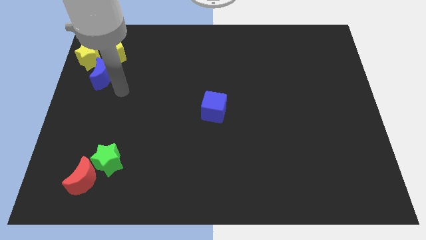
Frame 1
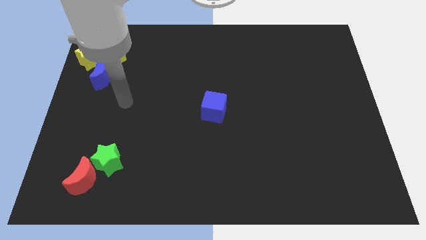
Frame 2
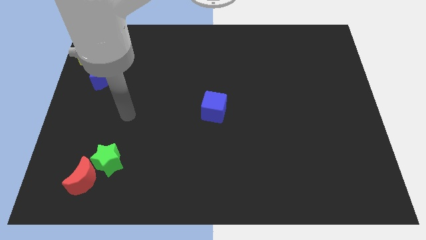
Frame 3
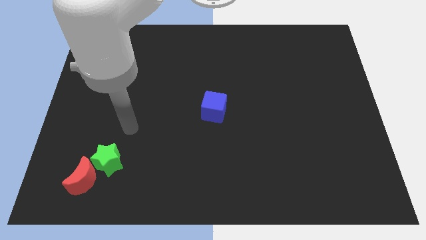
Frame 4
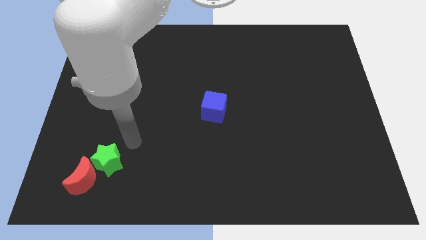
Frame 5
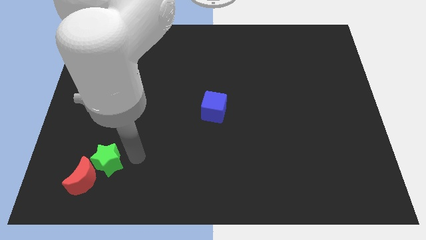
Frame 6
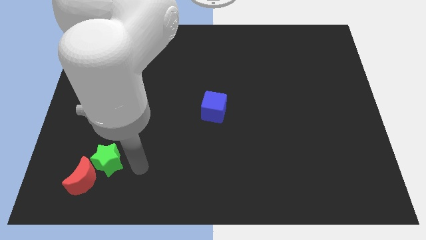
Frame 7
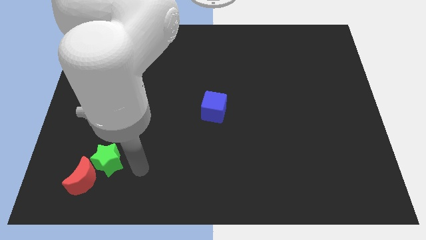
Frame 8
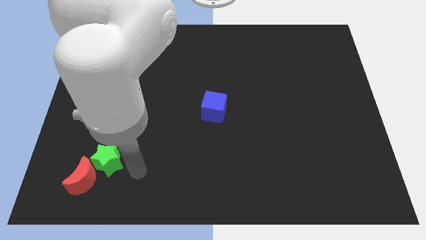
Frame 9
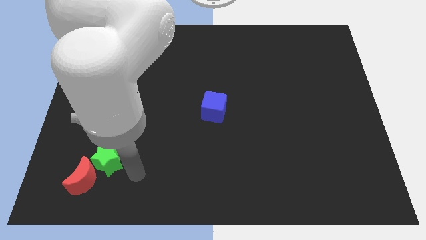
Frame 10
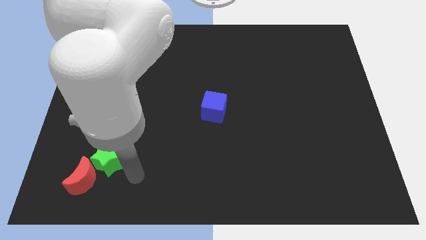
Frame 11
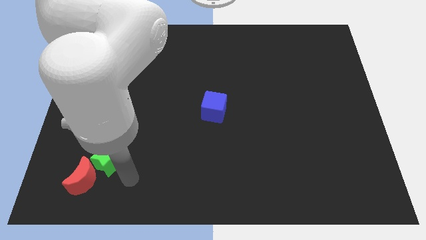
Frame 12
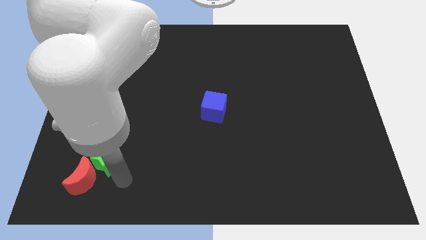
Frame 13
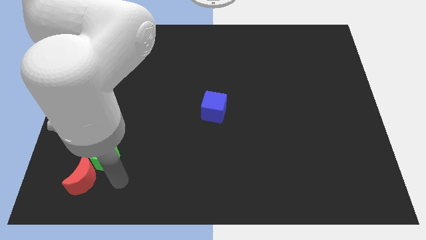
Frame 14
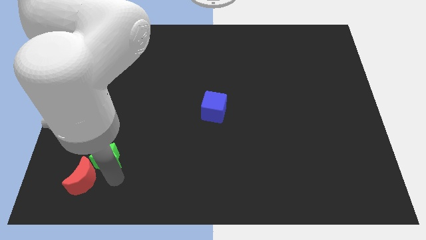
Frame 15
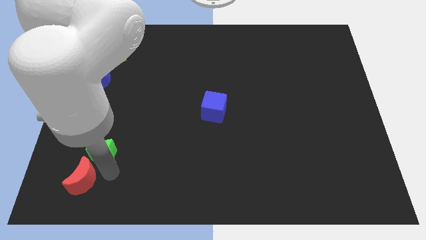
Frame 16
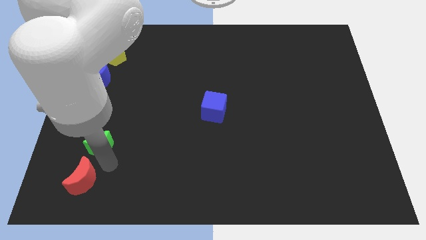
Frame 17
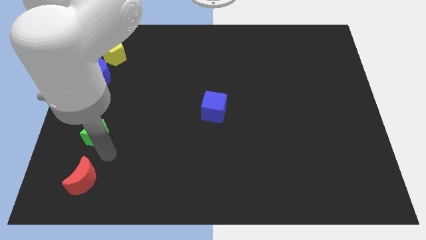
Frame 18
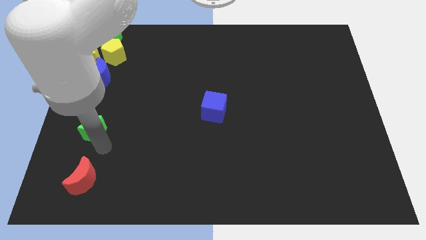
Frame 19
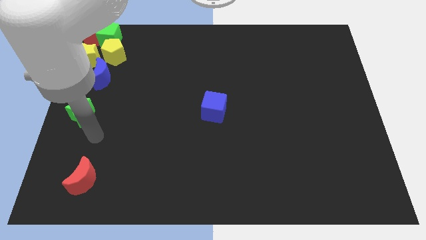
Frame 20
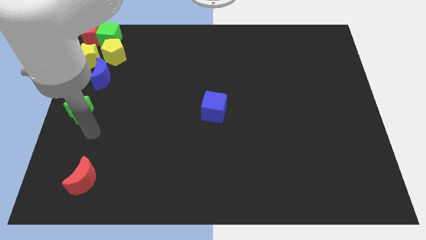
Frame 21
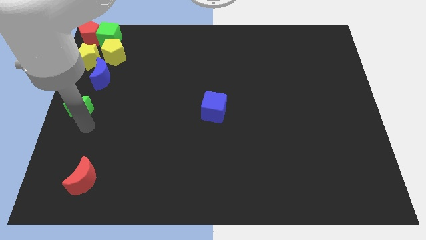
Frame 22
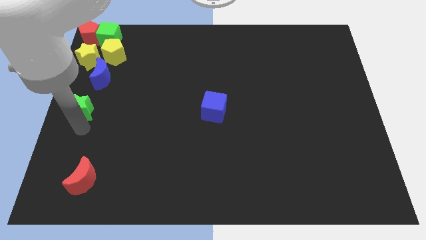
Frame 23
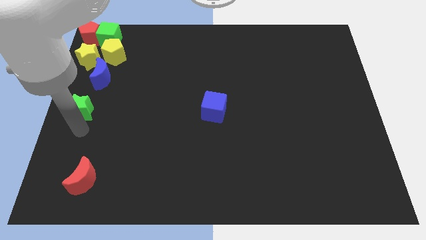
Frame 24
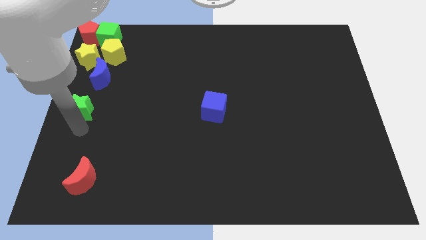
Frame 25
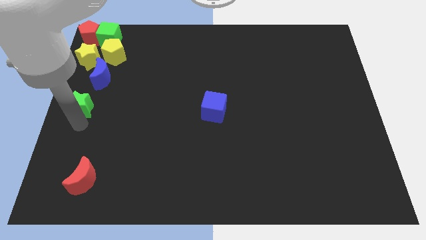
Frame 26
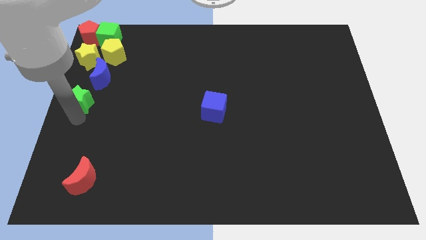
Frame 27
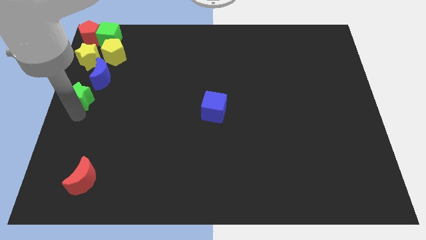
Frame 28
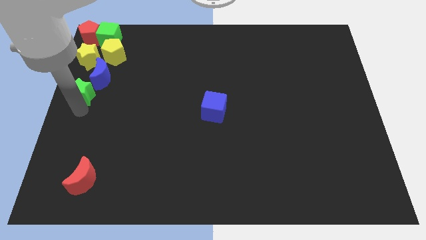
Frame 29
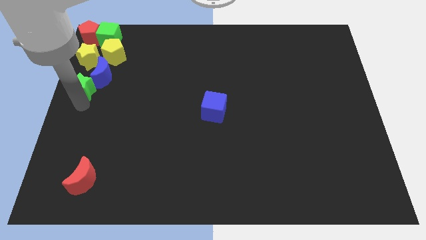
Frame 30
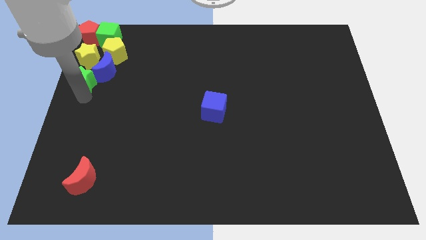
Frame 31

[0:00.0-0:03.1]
place green star below the yellow star

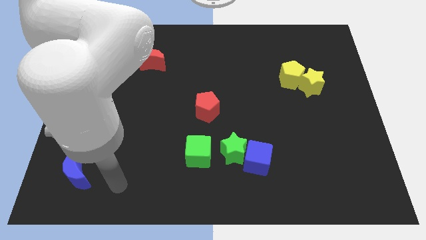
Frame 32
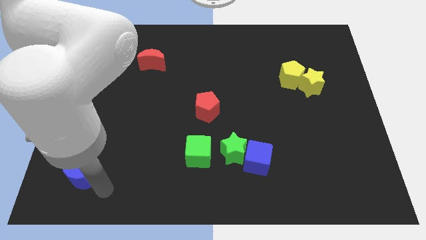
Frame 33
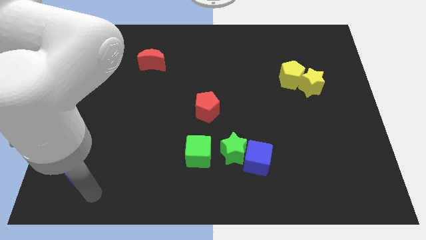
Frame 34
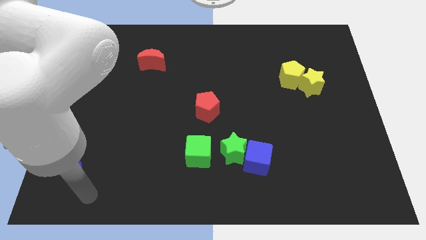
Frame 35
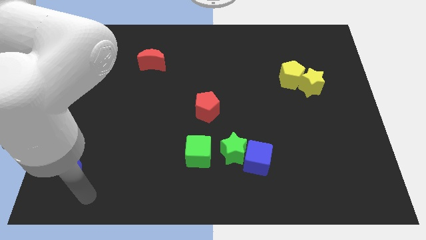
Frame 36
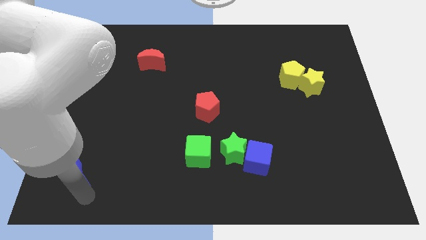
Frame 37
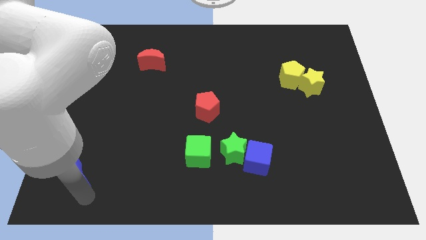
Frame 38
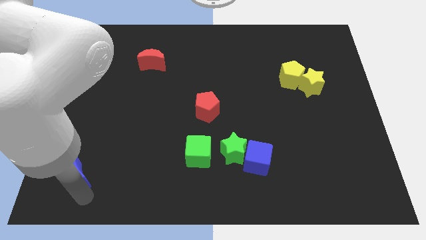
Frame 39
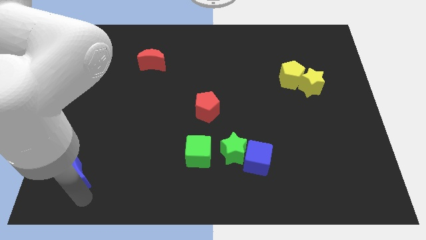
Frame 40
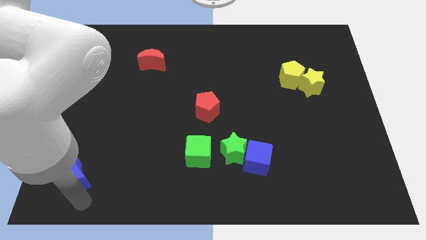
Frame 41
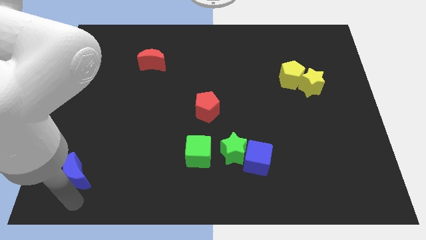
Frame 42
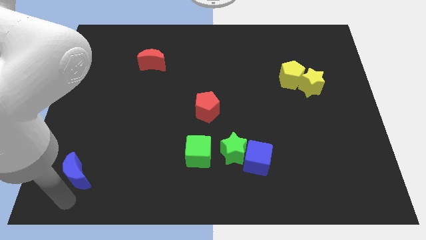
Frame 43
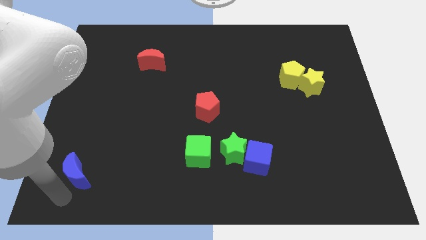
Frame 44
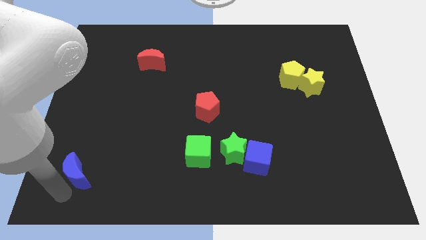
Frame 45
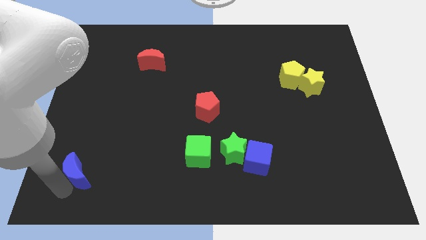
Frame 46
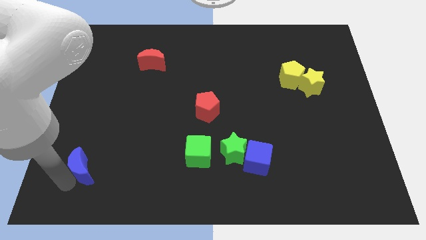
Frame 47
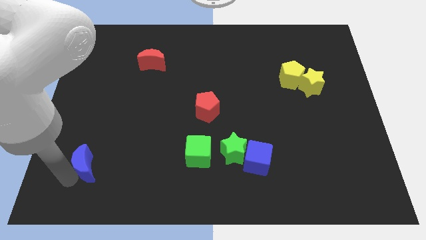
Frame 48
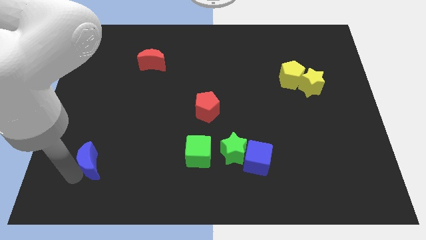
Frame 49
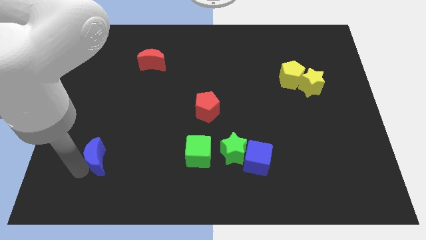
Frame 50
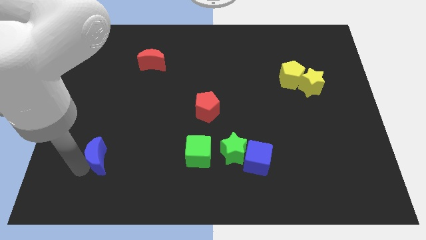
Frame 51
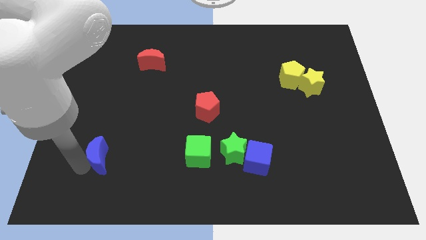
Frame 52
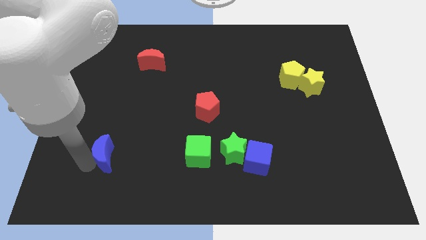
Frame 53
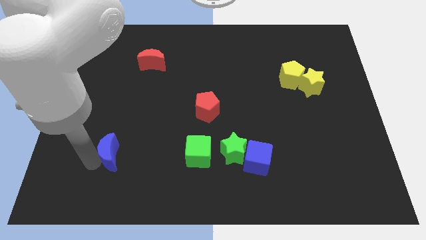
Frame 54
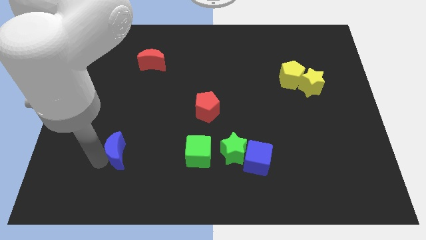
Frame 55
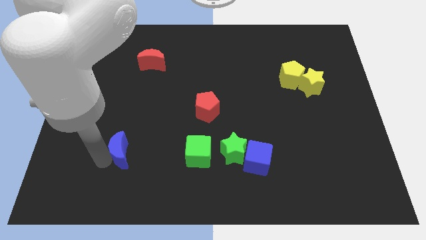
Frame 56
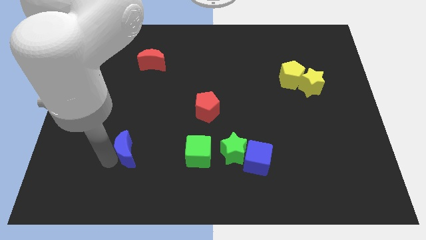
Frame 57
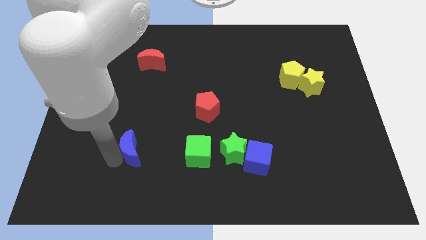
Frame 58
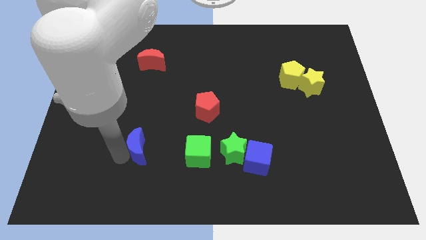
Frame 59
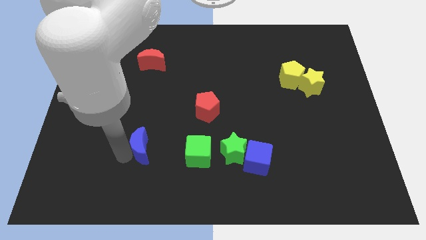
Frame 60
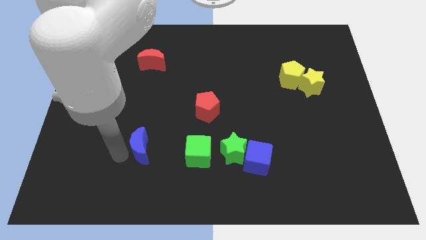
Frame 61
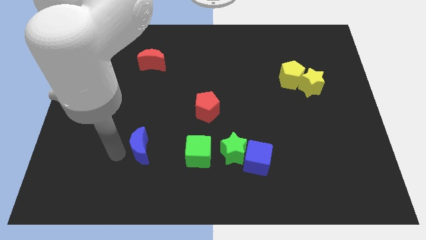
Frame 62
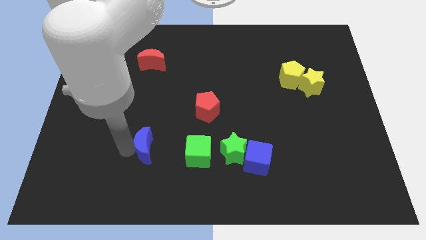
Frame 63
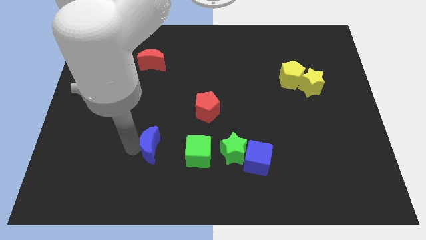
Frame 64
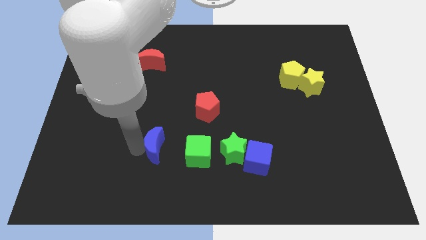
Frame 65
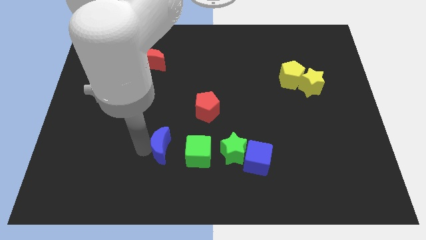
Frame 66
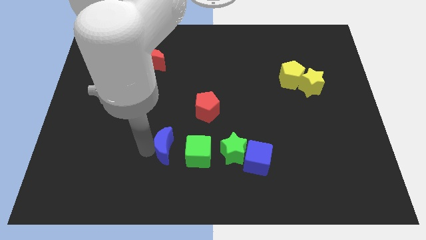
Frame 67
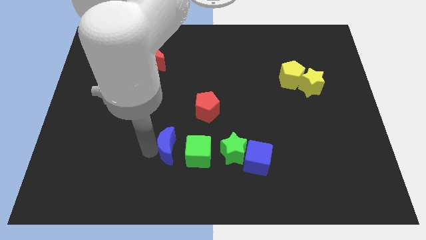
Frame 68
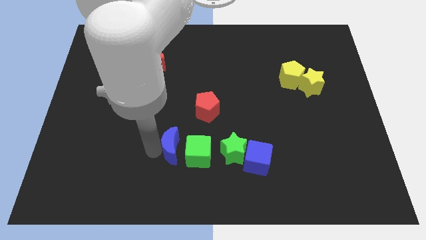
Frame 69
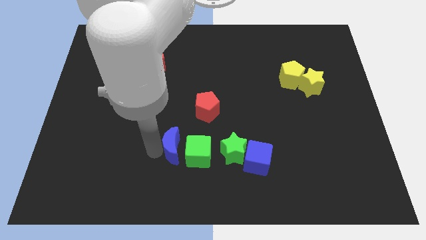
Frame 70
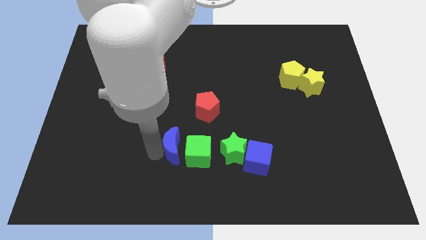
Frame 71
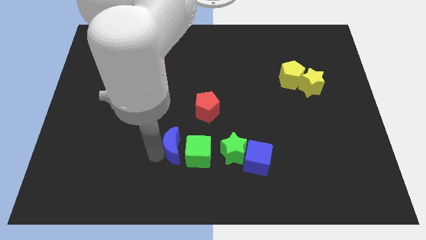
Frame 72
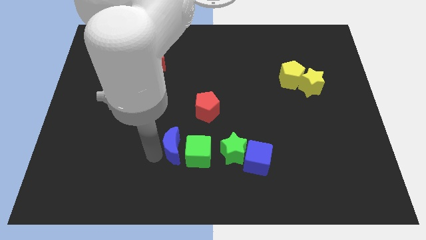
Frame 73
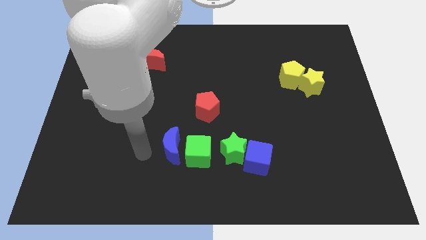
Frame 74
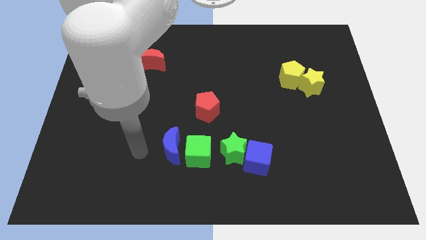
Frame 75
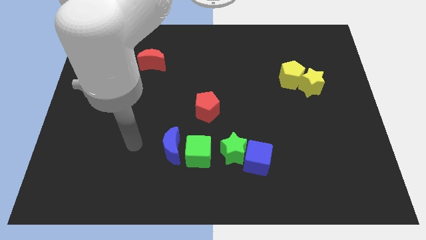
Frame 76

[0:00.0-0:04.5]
place the blue crescent left to the green cube

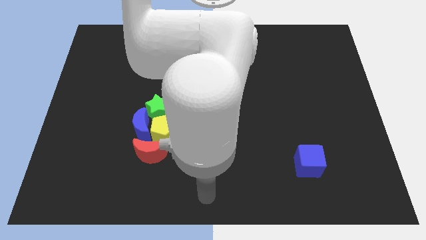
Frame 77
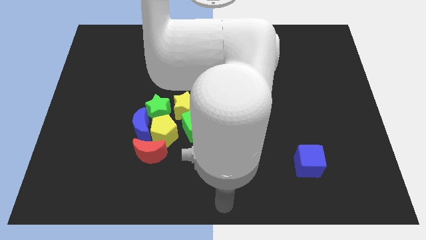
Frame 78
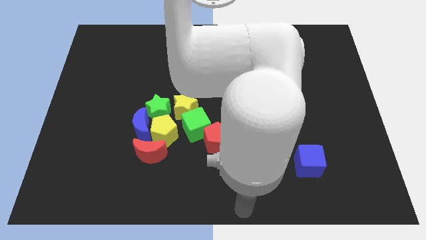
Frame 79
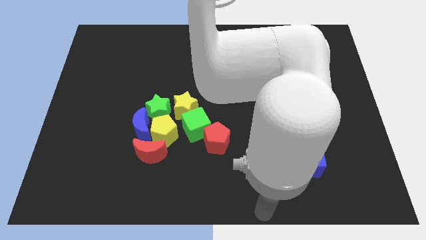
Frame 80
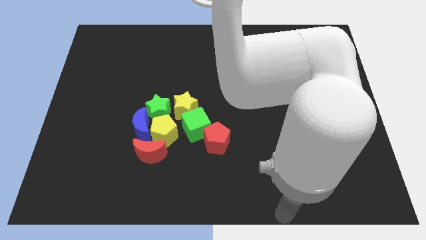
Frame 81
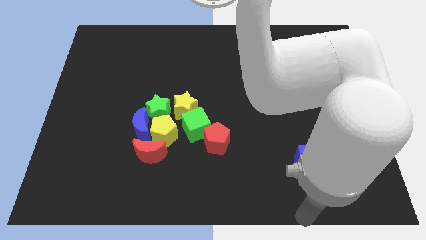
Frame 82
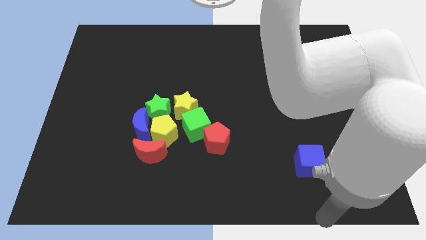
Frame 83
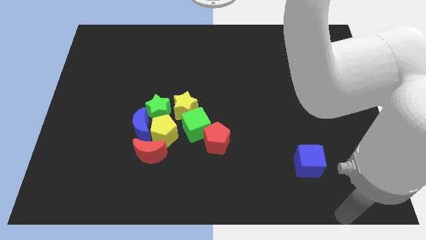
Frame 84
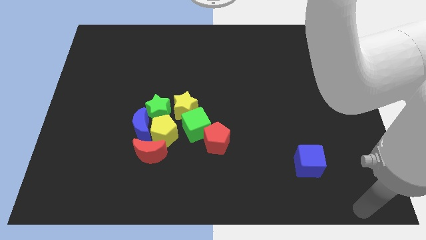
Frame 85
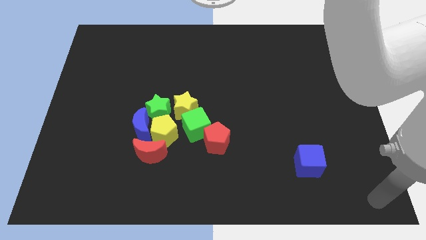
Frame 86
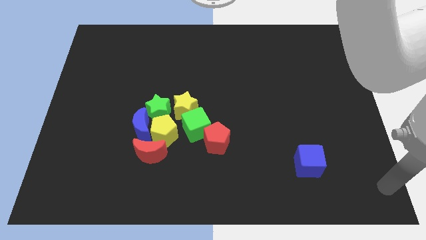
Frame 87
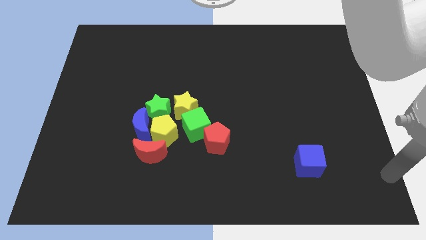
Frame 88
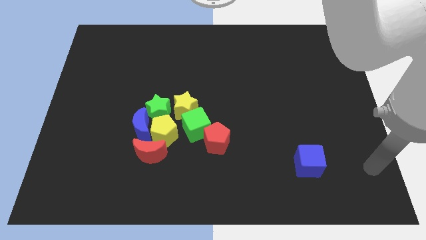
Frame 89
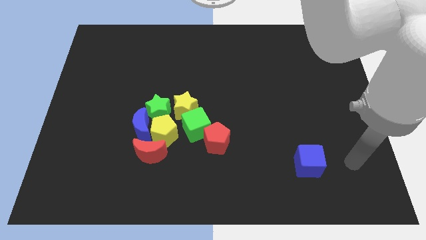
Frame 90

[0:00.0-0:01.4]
point the arm to the right of the blue cube
